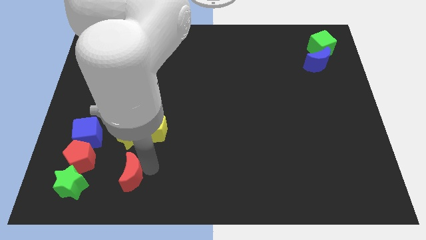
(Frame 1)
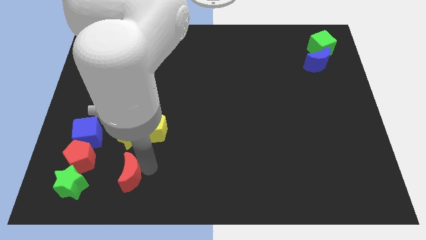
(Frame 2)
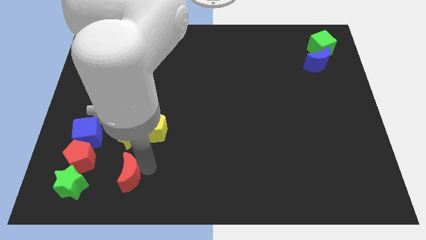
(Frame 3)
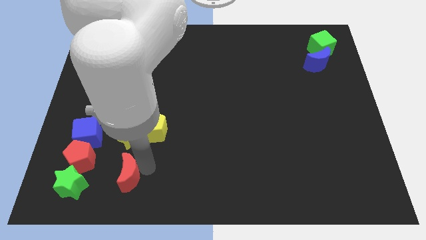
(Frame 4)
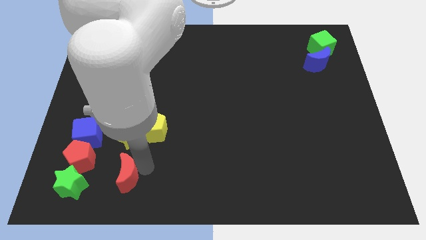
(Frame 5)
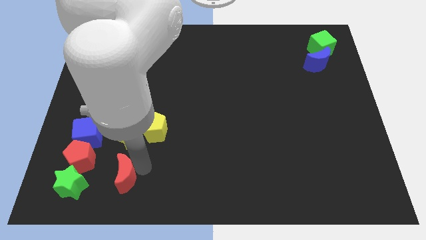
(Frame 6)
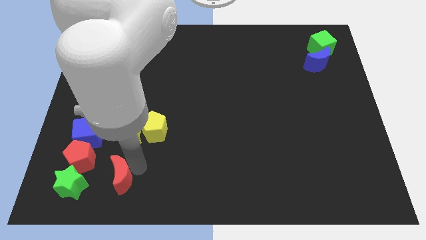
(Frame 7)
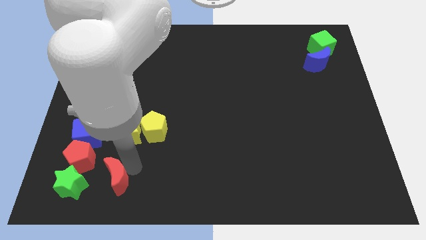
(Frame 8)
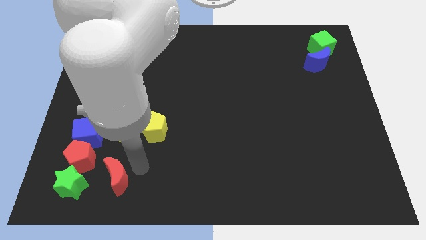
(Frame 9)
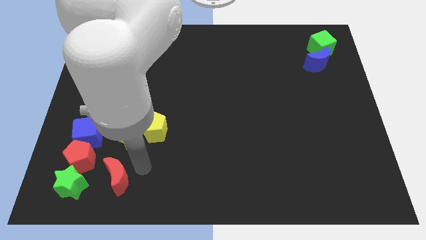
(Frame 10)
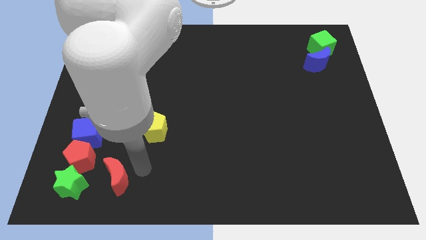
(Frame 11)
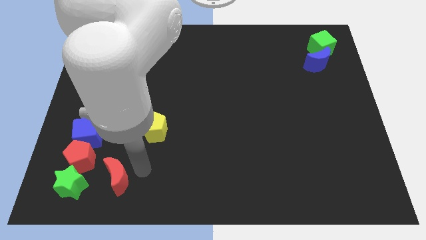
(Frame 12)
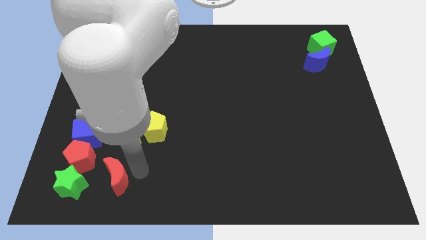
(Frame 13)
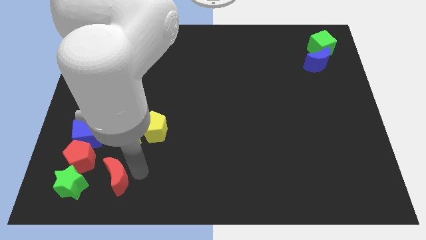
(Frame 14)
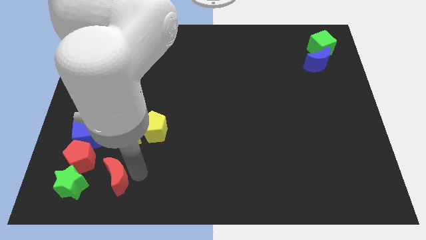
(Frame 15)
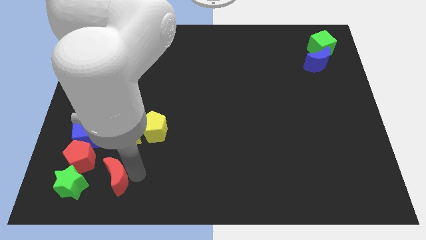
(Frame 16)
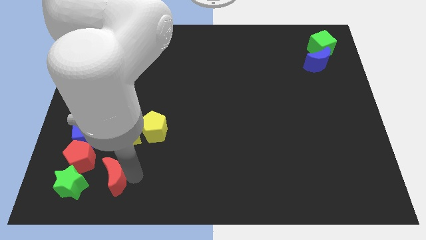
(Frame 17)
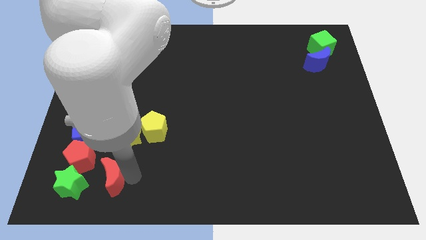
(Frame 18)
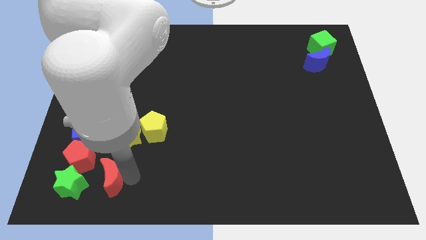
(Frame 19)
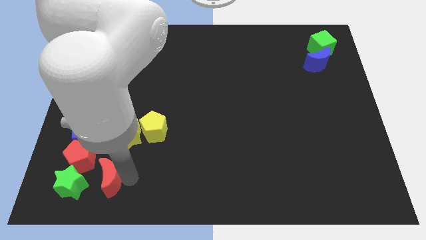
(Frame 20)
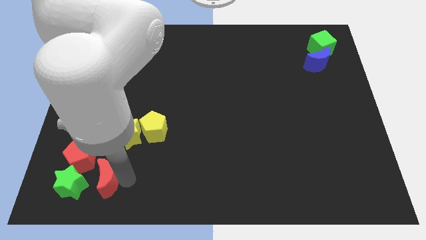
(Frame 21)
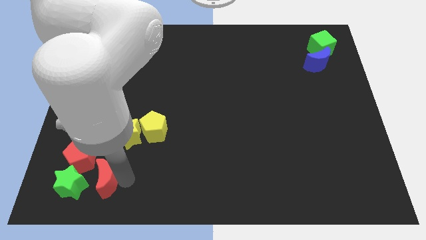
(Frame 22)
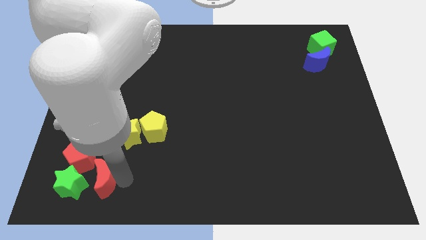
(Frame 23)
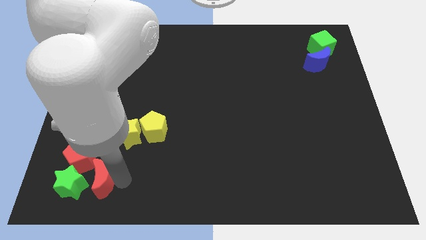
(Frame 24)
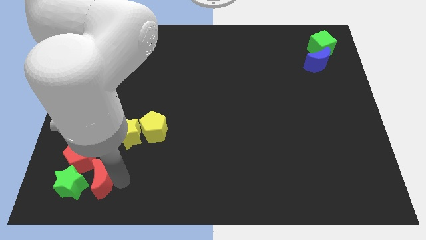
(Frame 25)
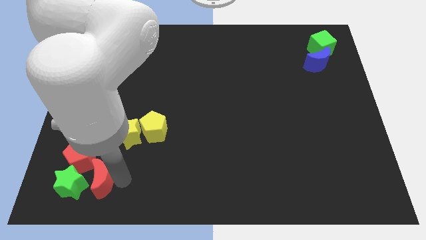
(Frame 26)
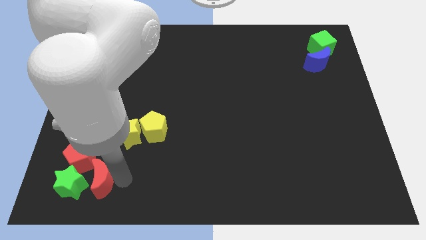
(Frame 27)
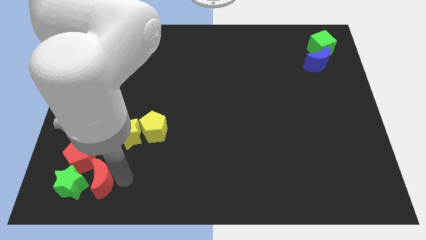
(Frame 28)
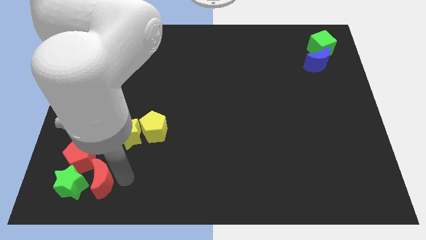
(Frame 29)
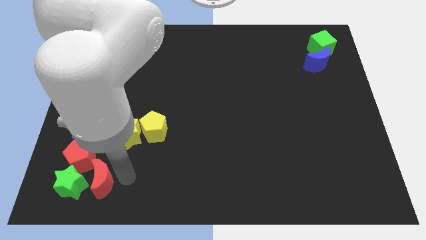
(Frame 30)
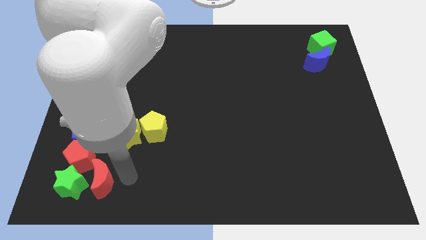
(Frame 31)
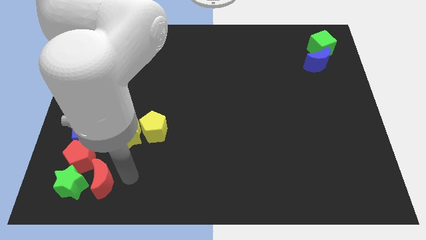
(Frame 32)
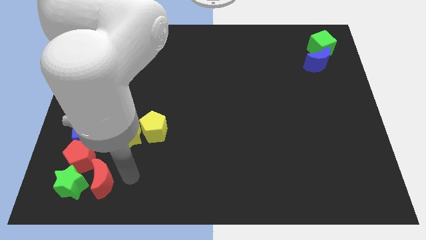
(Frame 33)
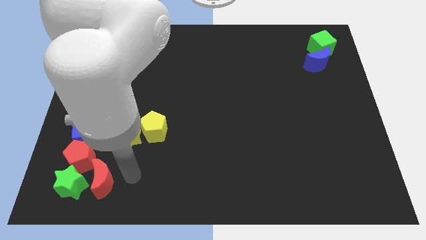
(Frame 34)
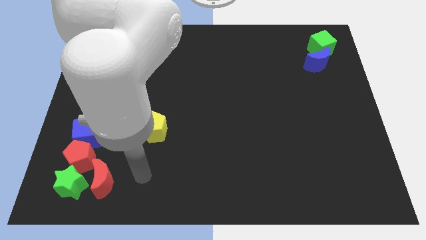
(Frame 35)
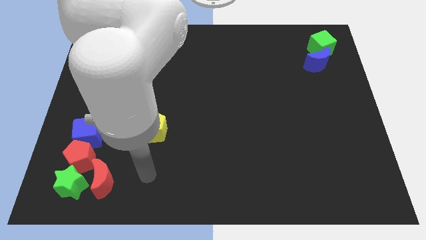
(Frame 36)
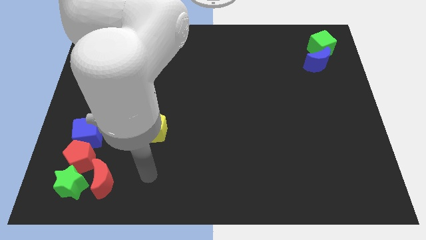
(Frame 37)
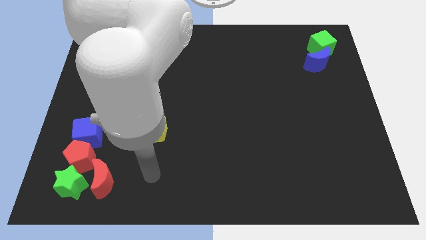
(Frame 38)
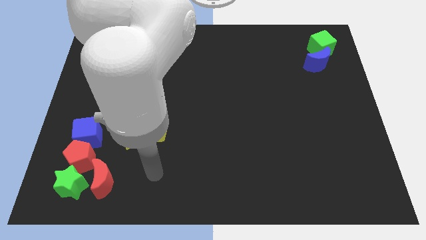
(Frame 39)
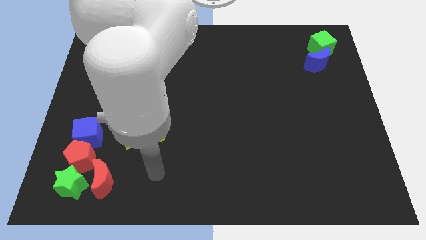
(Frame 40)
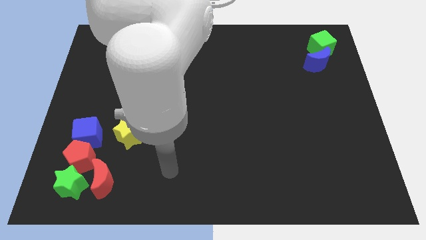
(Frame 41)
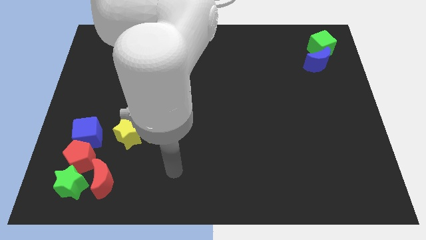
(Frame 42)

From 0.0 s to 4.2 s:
place the red moon to the right of the green star

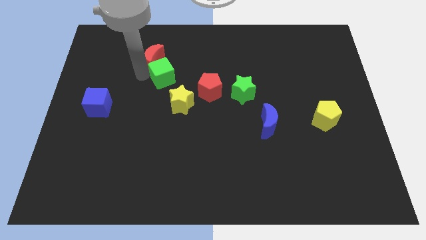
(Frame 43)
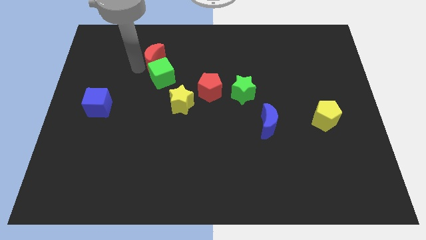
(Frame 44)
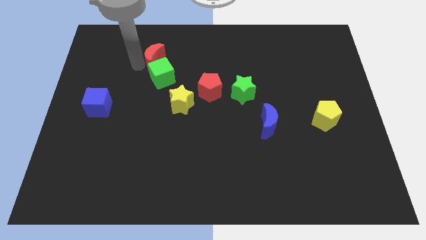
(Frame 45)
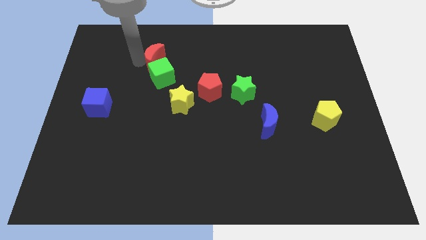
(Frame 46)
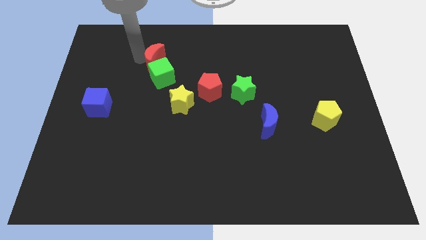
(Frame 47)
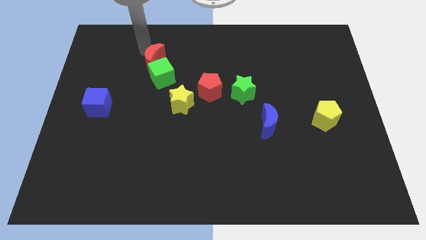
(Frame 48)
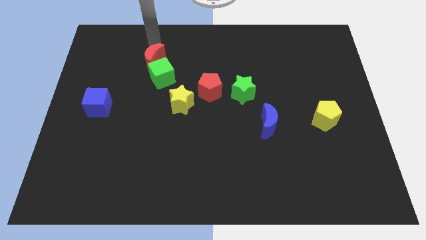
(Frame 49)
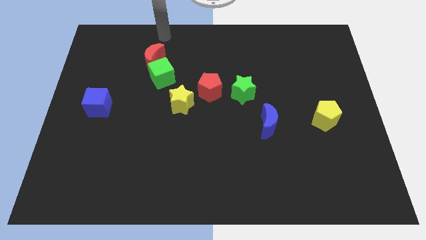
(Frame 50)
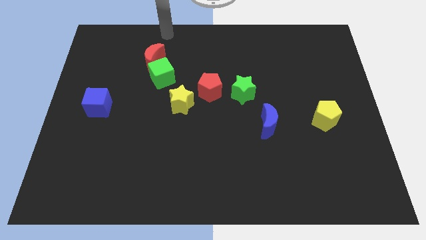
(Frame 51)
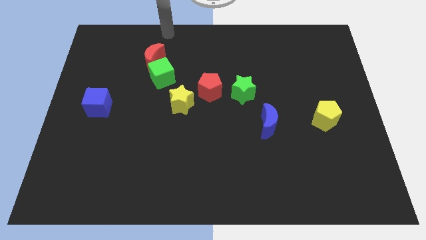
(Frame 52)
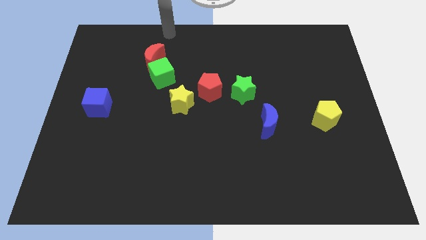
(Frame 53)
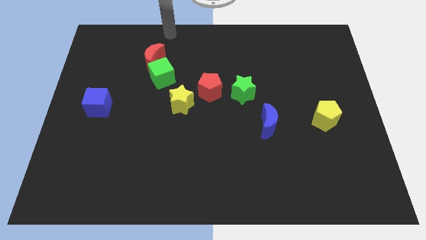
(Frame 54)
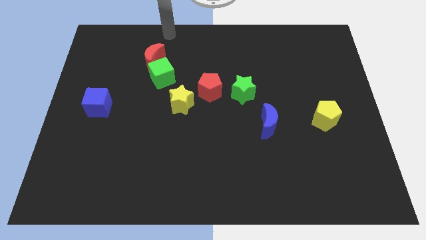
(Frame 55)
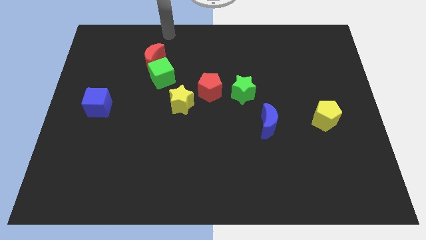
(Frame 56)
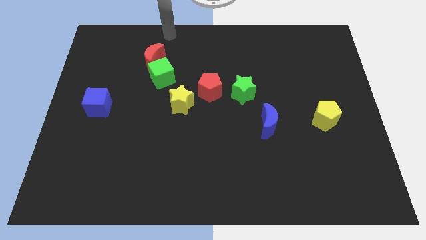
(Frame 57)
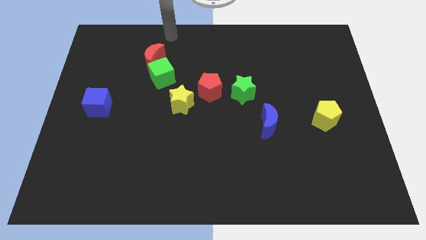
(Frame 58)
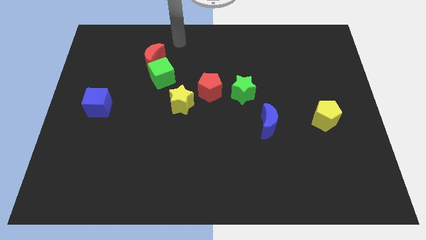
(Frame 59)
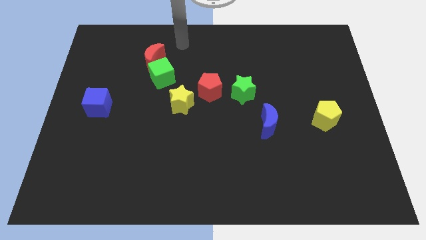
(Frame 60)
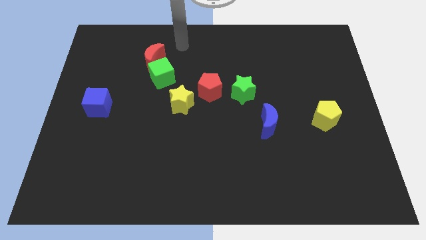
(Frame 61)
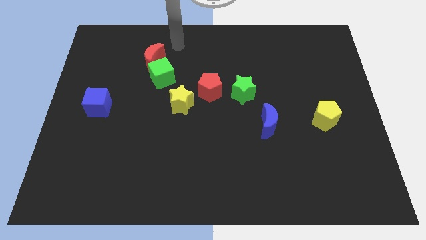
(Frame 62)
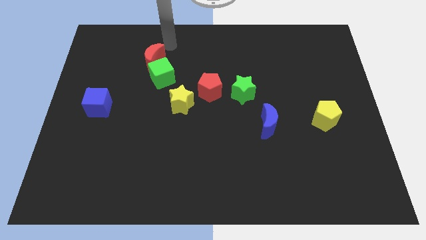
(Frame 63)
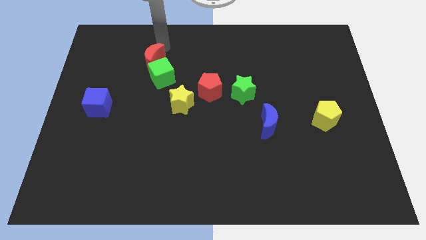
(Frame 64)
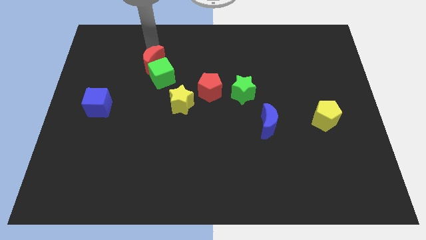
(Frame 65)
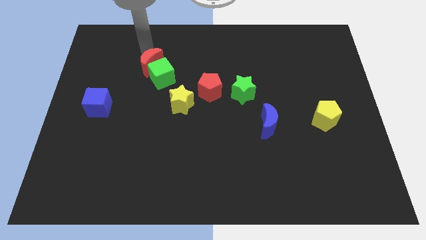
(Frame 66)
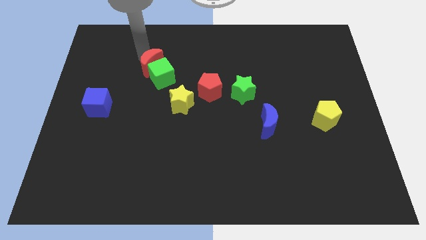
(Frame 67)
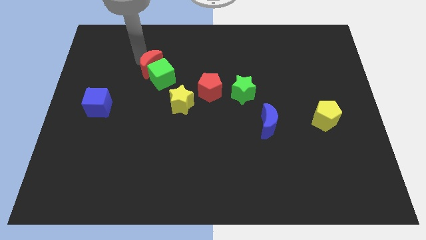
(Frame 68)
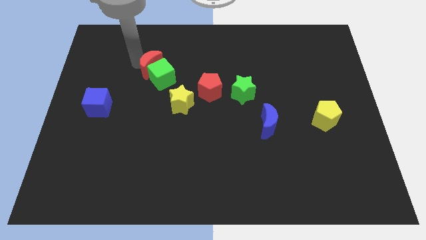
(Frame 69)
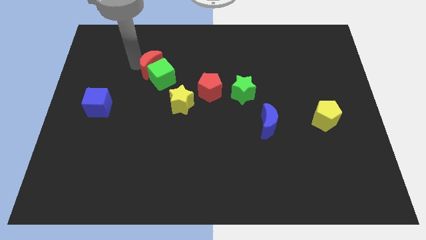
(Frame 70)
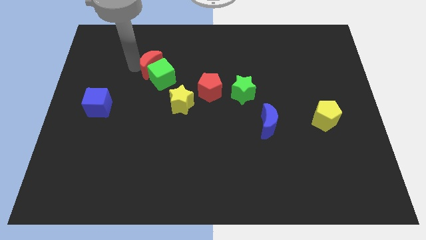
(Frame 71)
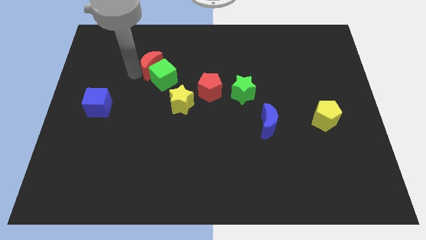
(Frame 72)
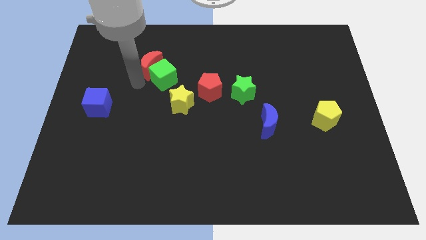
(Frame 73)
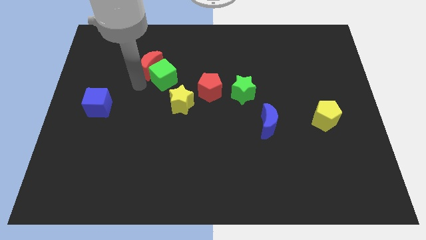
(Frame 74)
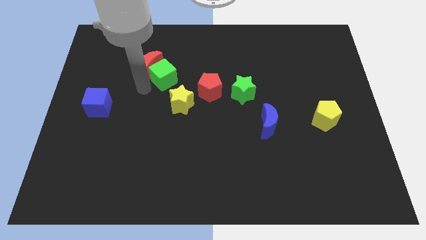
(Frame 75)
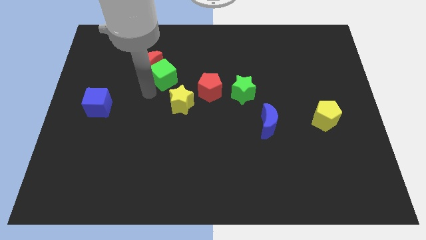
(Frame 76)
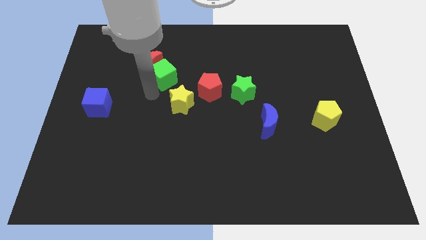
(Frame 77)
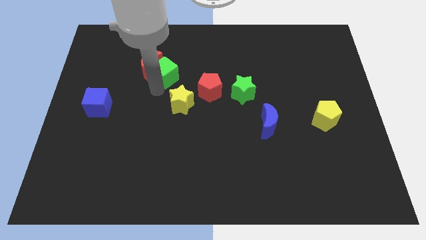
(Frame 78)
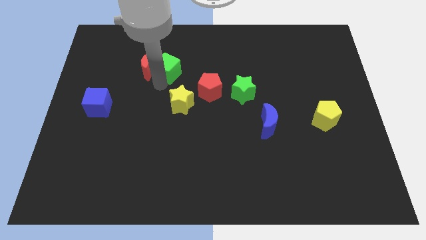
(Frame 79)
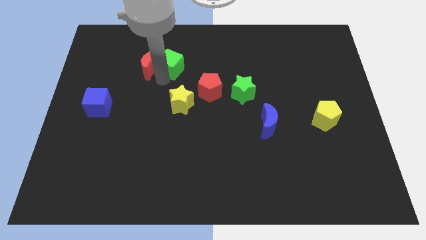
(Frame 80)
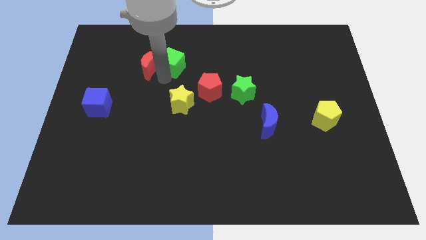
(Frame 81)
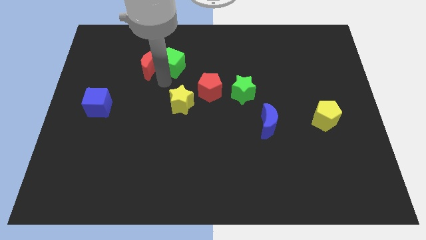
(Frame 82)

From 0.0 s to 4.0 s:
push green cube slightly upwards

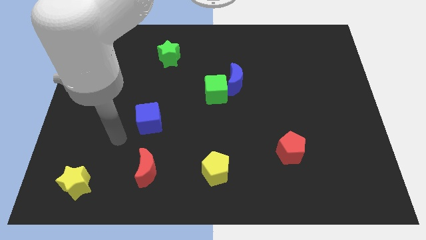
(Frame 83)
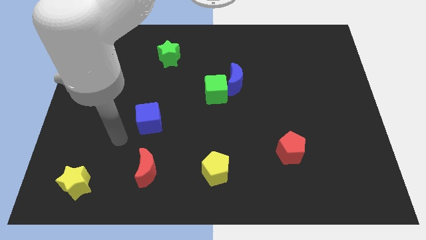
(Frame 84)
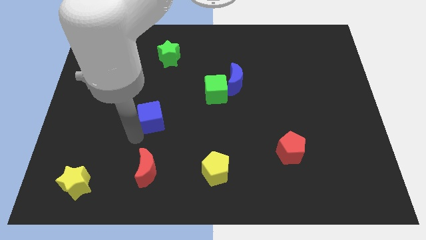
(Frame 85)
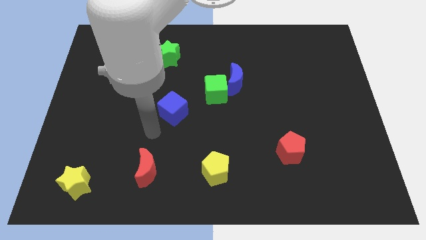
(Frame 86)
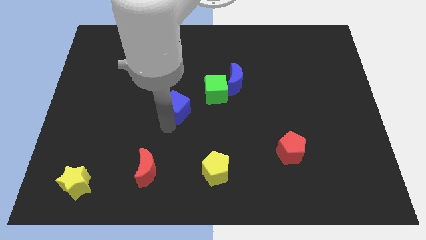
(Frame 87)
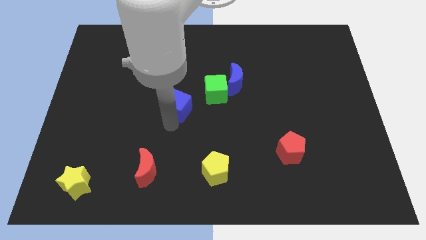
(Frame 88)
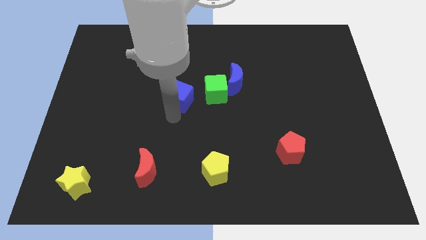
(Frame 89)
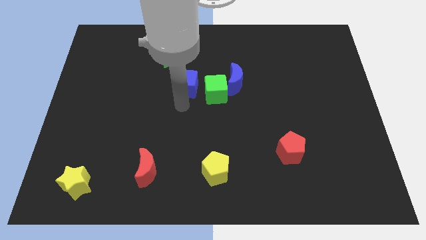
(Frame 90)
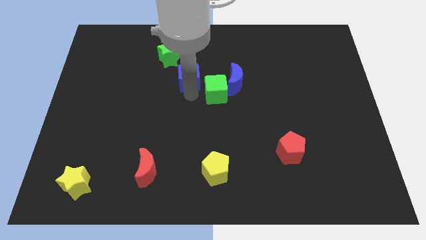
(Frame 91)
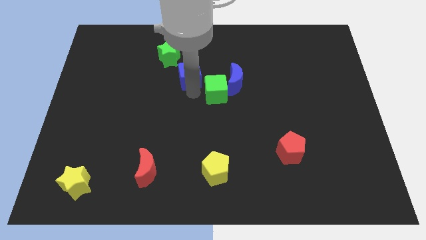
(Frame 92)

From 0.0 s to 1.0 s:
place the blue cube in between the two green blocks
